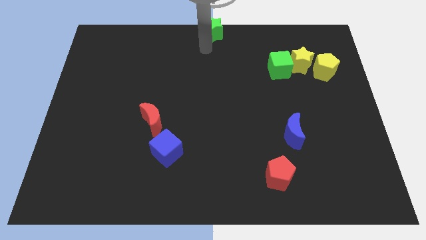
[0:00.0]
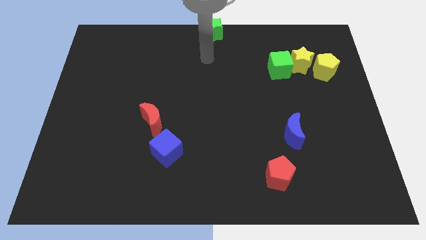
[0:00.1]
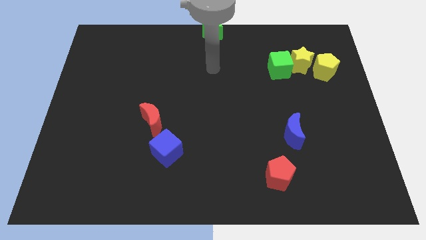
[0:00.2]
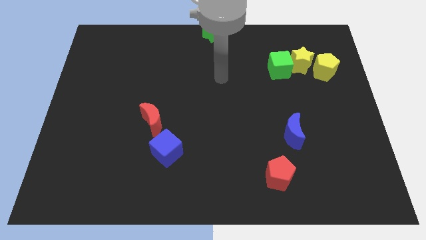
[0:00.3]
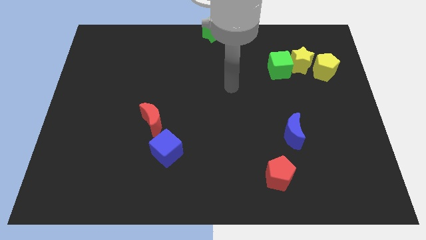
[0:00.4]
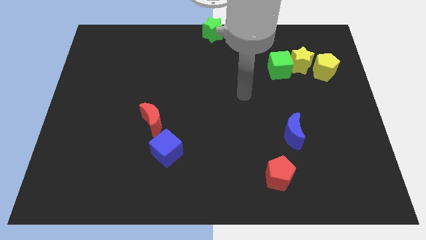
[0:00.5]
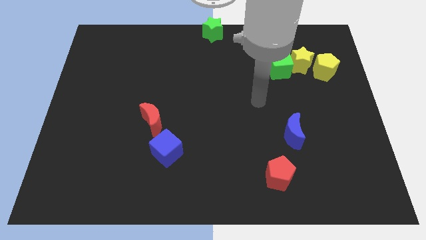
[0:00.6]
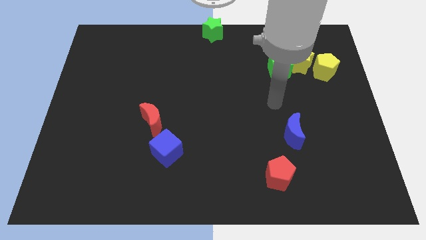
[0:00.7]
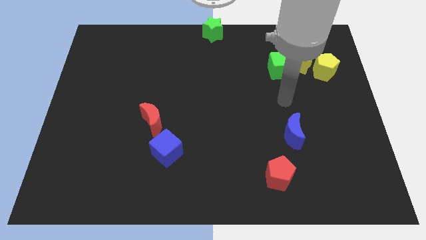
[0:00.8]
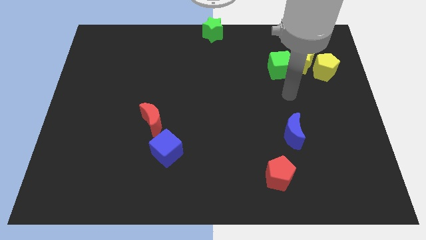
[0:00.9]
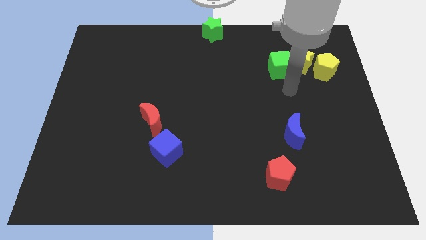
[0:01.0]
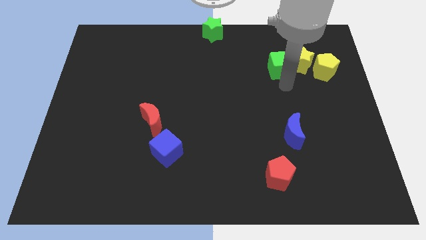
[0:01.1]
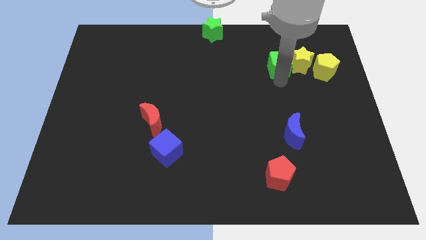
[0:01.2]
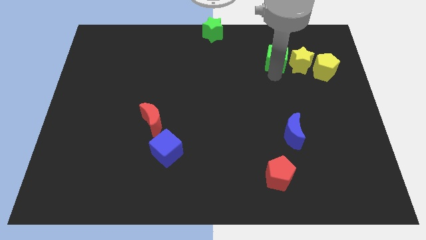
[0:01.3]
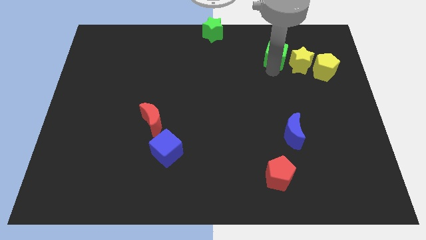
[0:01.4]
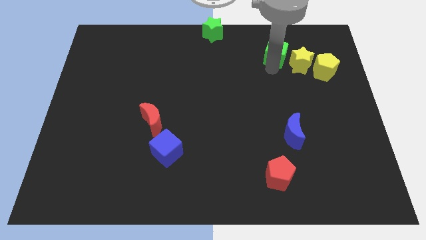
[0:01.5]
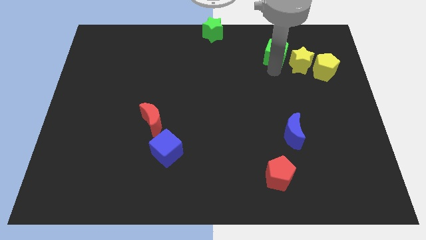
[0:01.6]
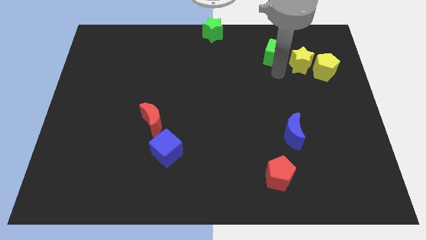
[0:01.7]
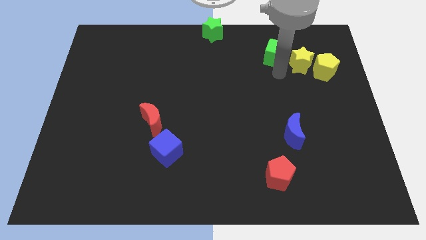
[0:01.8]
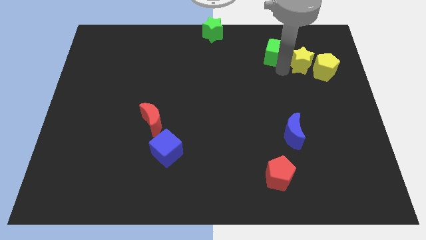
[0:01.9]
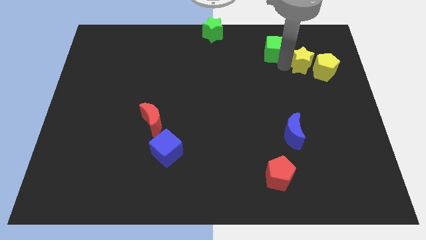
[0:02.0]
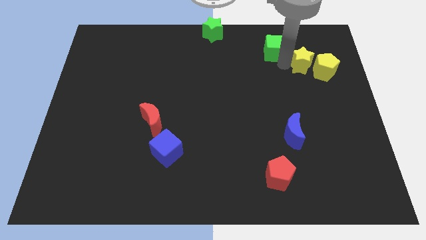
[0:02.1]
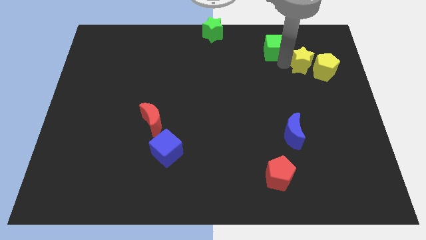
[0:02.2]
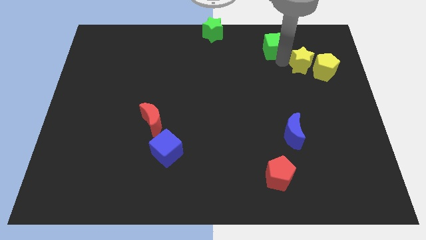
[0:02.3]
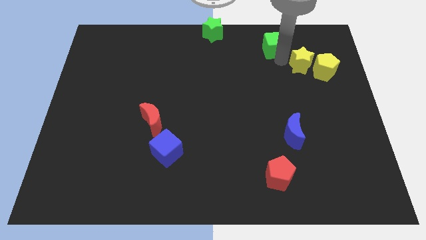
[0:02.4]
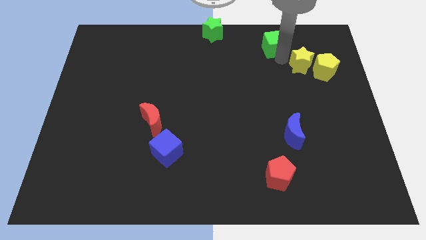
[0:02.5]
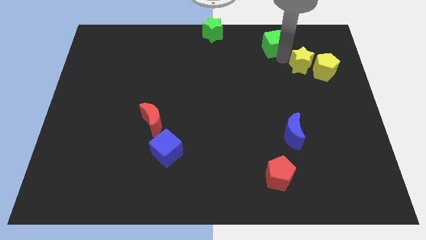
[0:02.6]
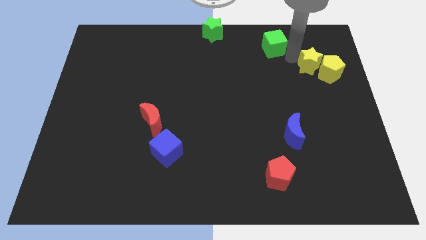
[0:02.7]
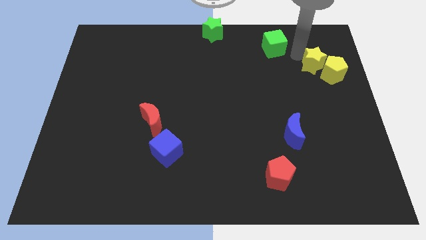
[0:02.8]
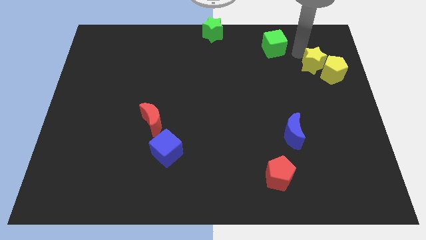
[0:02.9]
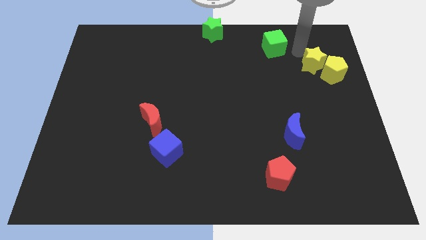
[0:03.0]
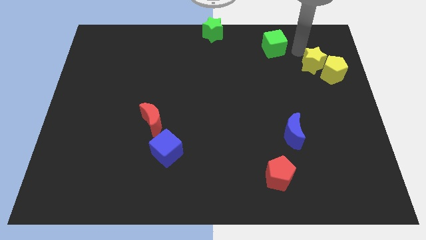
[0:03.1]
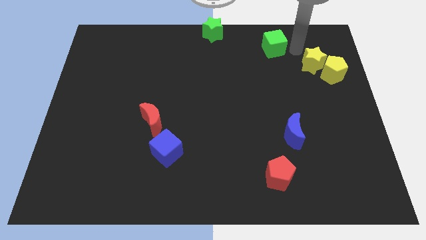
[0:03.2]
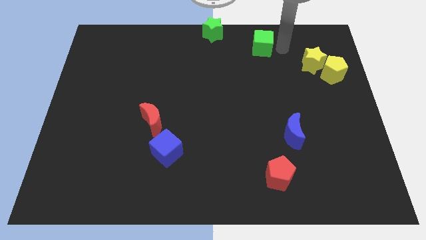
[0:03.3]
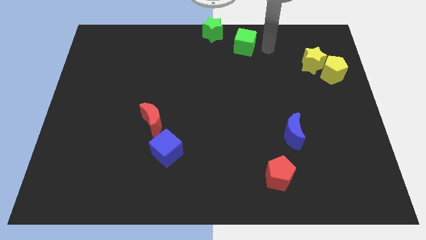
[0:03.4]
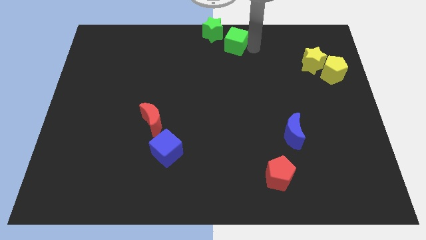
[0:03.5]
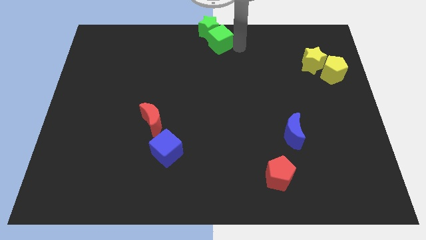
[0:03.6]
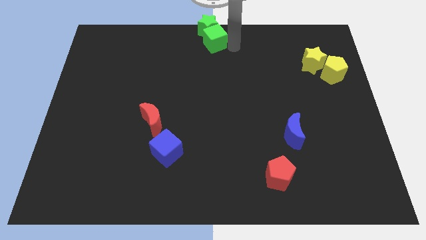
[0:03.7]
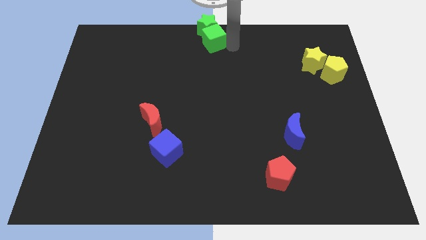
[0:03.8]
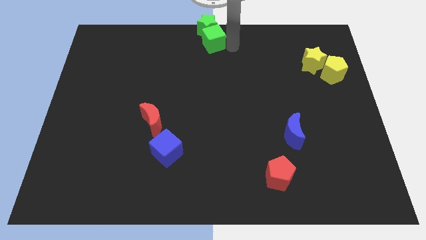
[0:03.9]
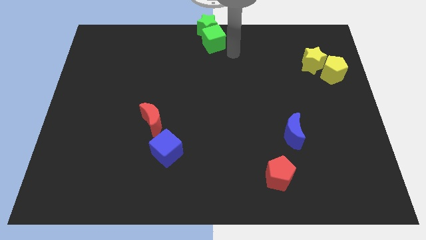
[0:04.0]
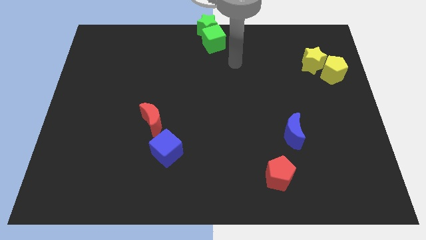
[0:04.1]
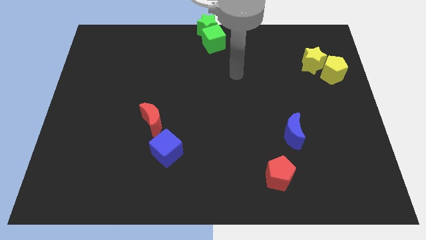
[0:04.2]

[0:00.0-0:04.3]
push the green cube into the green star

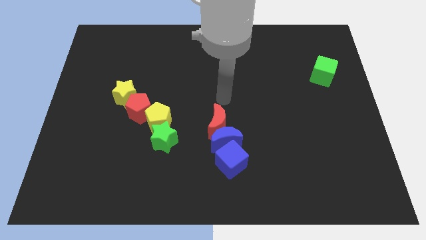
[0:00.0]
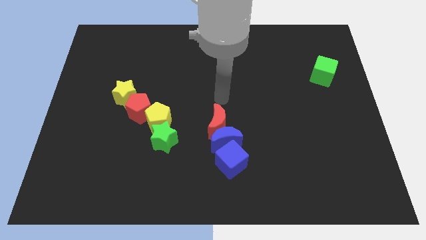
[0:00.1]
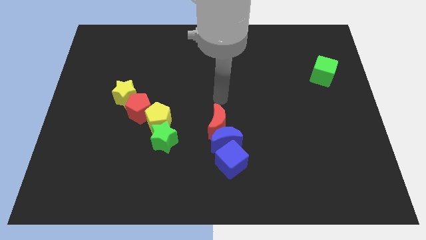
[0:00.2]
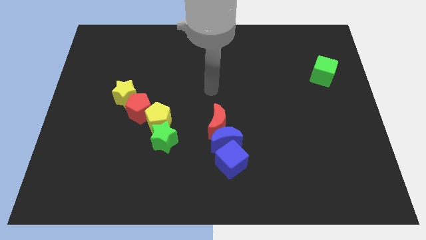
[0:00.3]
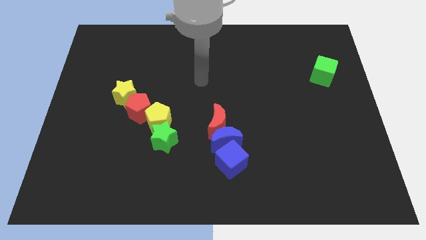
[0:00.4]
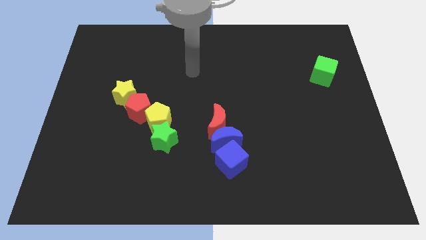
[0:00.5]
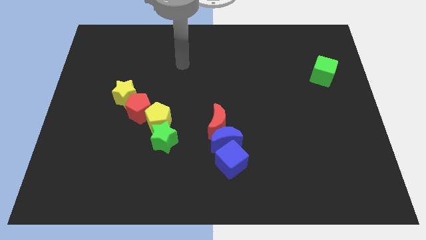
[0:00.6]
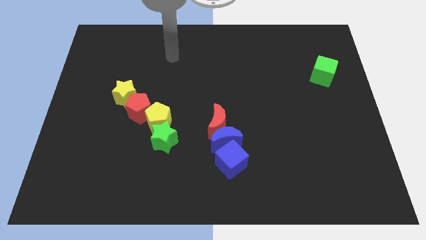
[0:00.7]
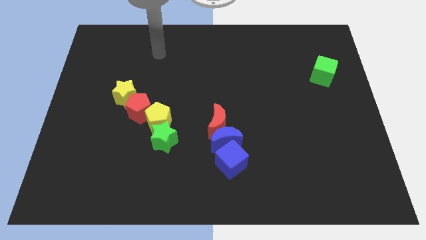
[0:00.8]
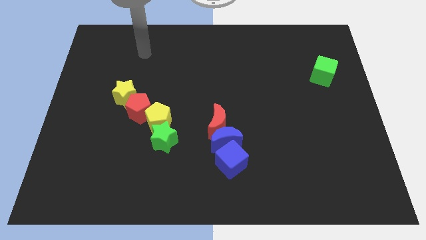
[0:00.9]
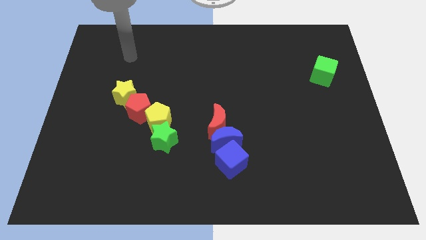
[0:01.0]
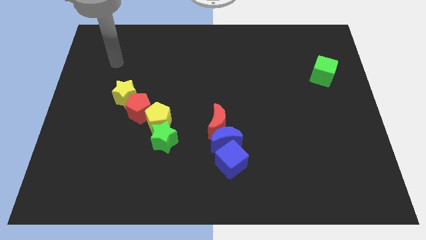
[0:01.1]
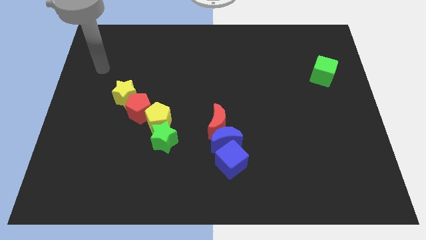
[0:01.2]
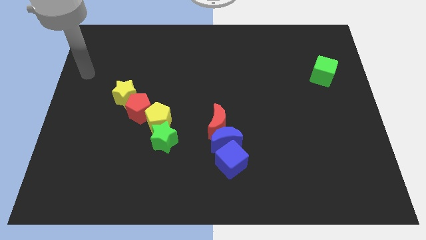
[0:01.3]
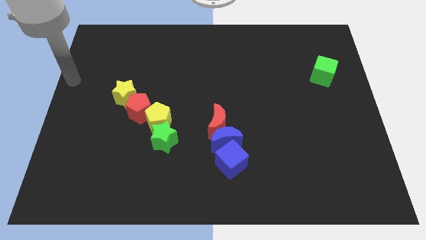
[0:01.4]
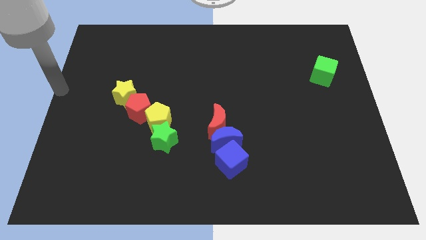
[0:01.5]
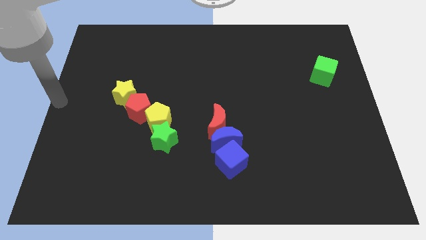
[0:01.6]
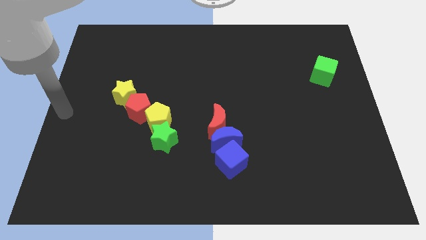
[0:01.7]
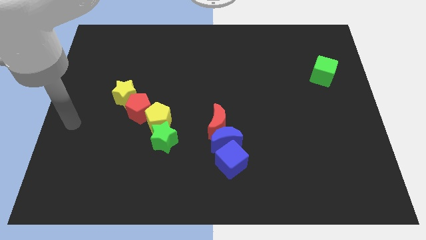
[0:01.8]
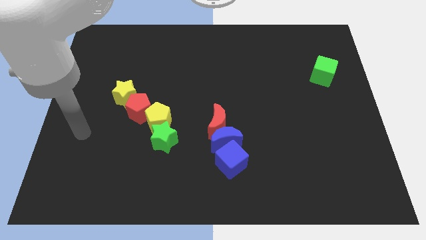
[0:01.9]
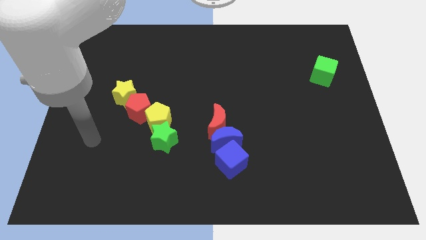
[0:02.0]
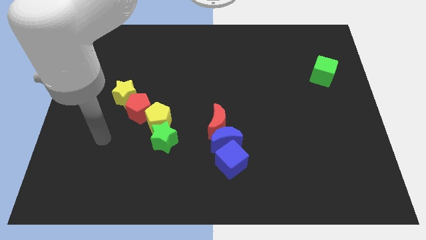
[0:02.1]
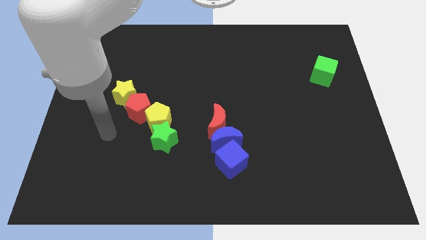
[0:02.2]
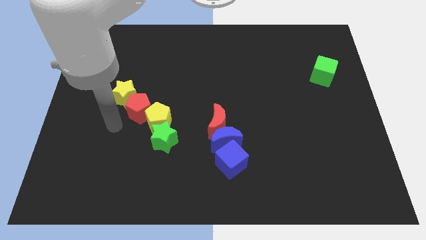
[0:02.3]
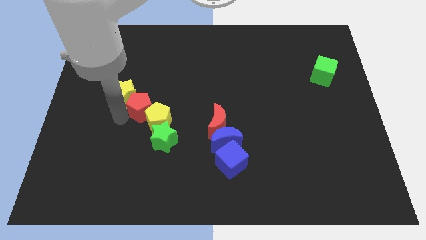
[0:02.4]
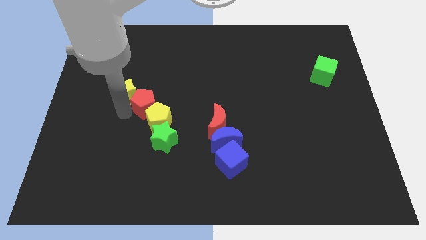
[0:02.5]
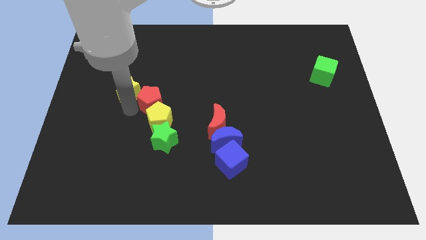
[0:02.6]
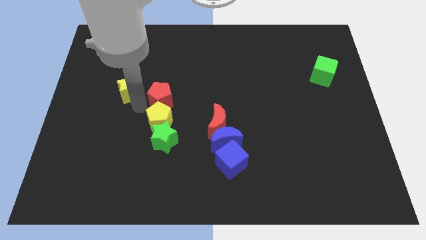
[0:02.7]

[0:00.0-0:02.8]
push the red pentagon to the top of the yellow pentagon

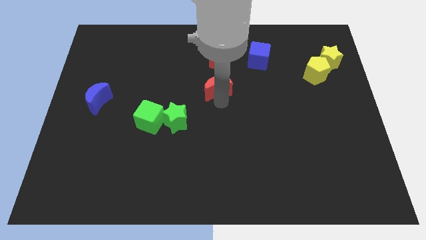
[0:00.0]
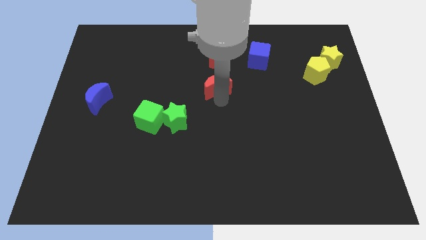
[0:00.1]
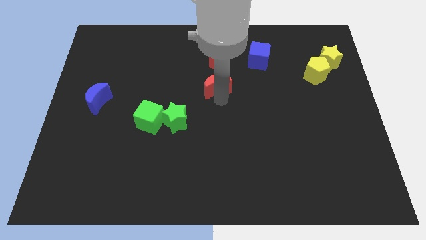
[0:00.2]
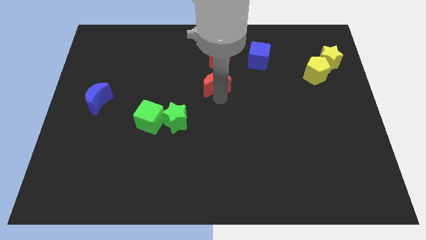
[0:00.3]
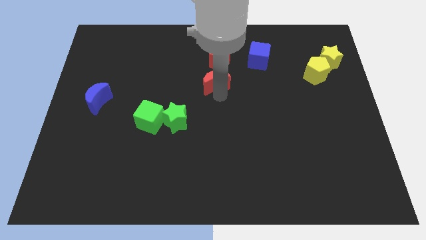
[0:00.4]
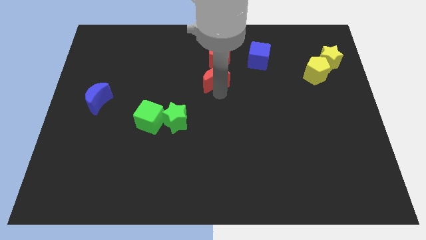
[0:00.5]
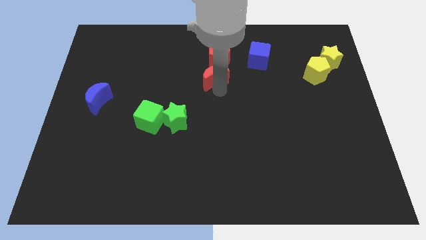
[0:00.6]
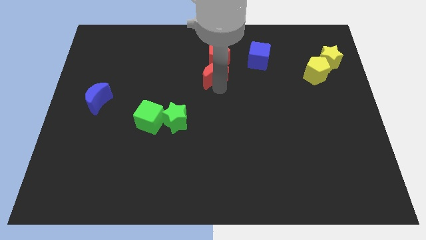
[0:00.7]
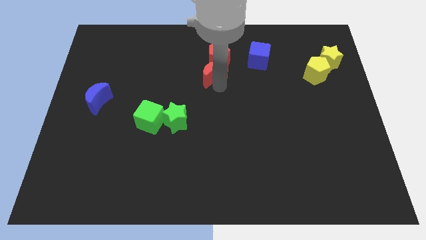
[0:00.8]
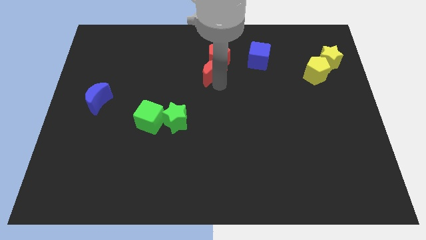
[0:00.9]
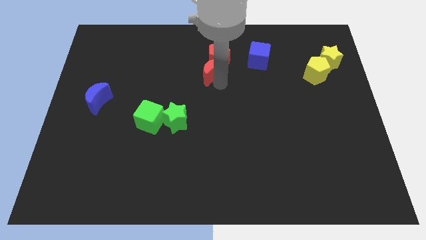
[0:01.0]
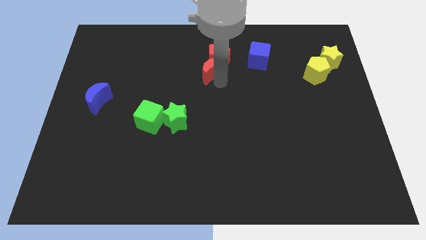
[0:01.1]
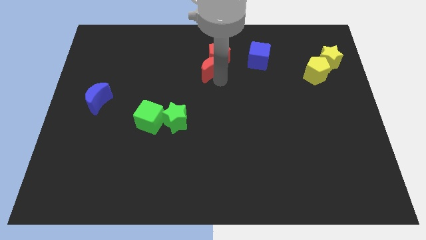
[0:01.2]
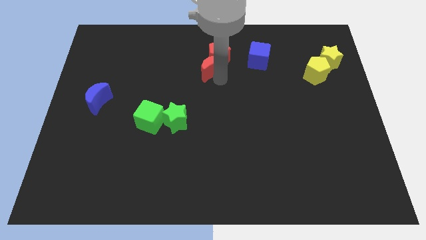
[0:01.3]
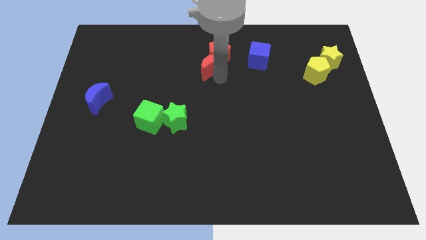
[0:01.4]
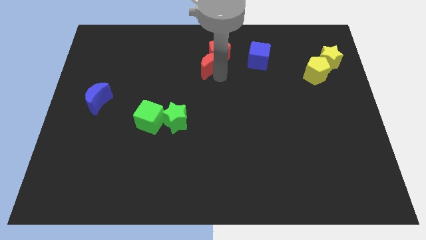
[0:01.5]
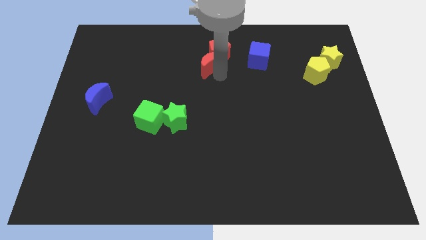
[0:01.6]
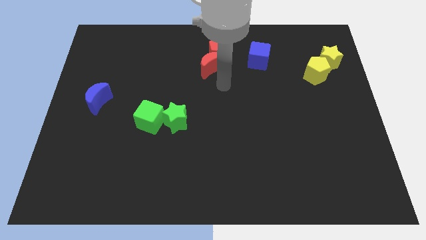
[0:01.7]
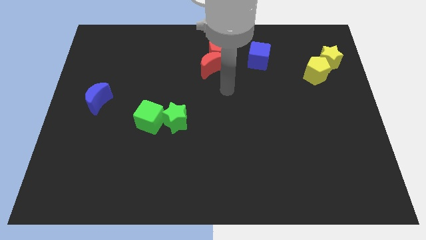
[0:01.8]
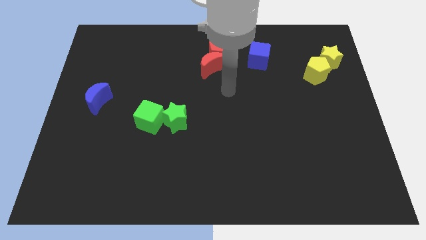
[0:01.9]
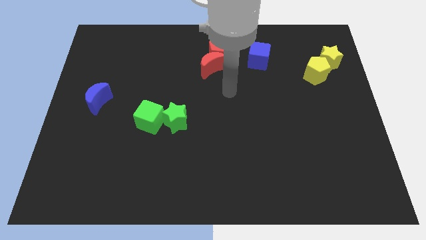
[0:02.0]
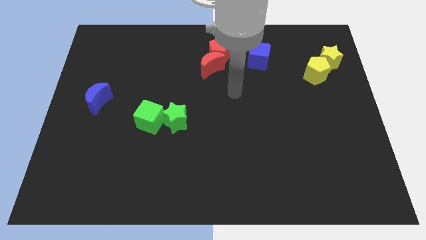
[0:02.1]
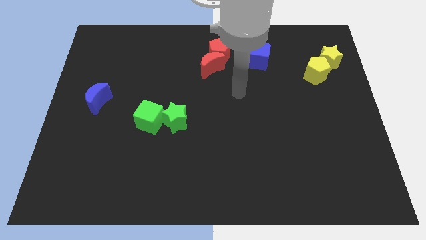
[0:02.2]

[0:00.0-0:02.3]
push the red crescent towards the center top of the board
